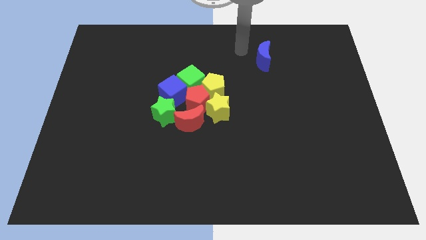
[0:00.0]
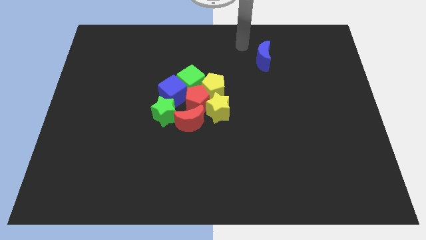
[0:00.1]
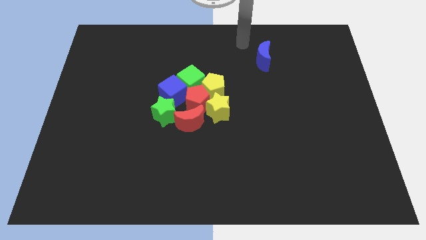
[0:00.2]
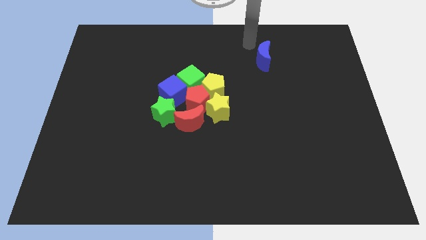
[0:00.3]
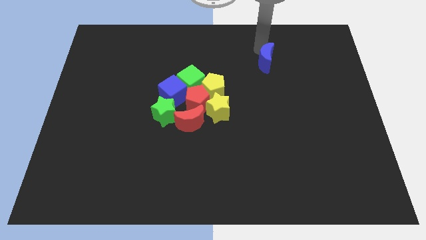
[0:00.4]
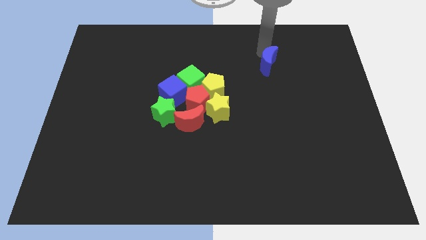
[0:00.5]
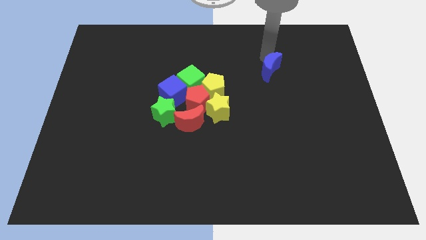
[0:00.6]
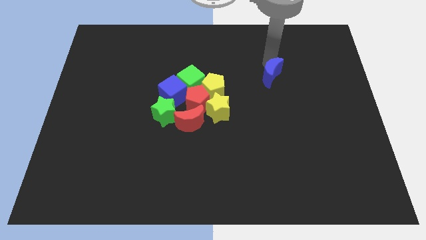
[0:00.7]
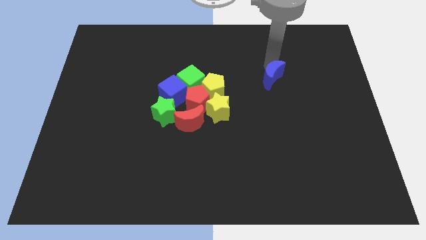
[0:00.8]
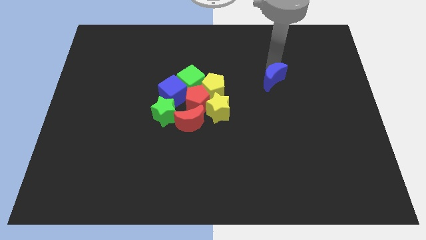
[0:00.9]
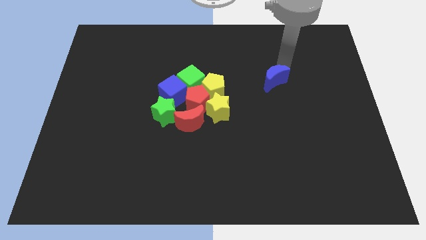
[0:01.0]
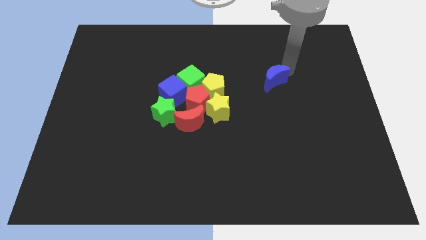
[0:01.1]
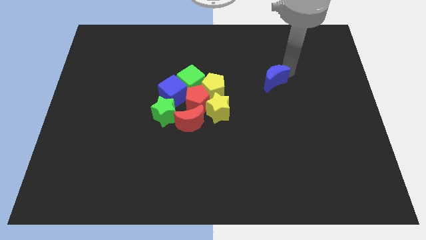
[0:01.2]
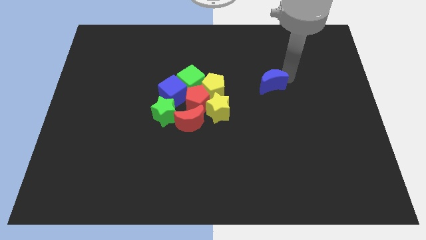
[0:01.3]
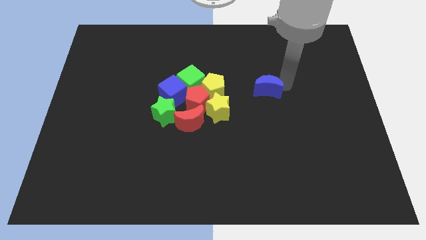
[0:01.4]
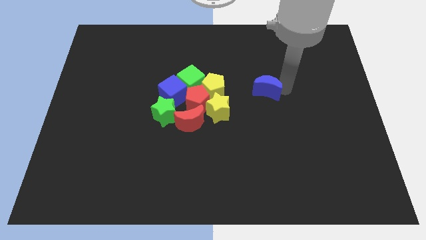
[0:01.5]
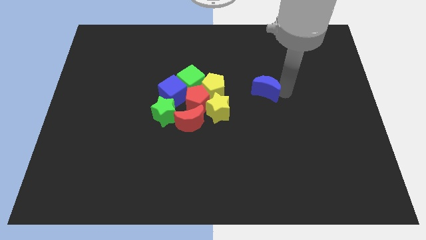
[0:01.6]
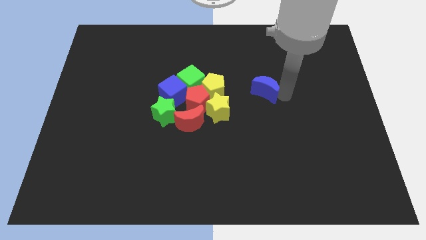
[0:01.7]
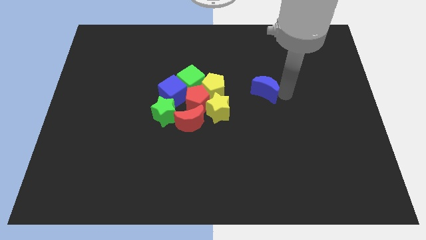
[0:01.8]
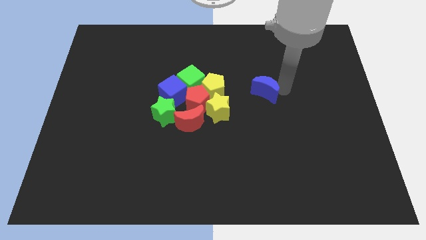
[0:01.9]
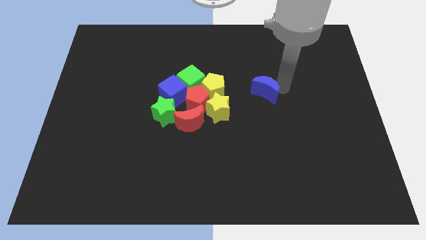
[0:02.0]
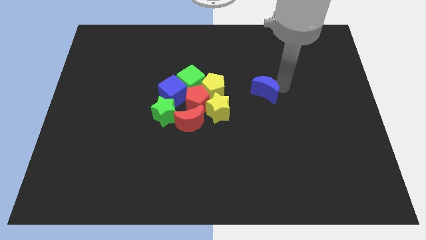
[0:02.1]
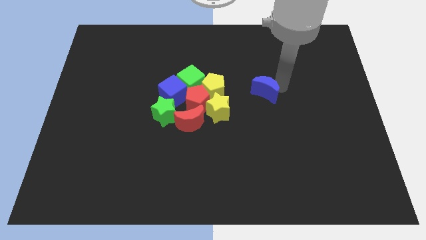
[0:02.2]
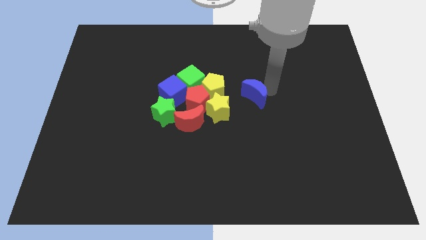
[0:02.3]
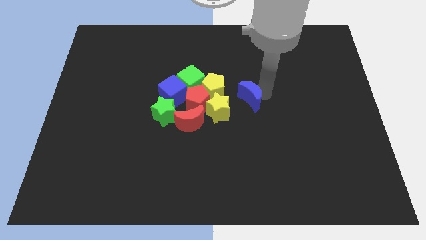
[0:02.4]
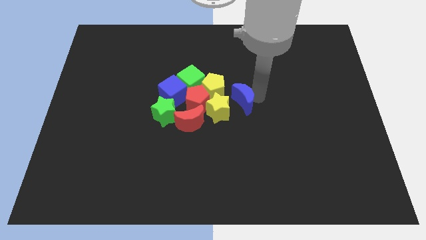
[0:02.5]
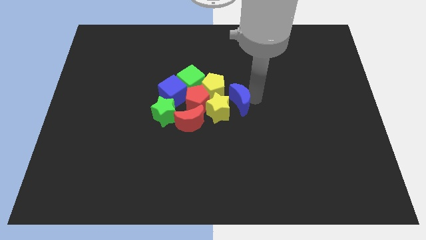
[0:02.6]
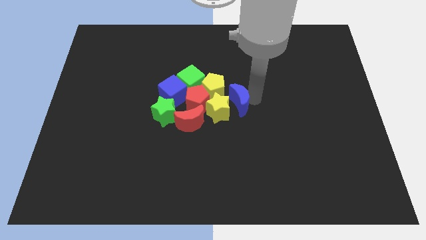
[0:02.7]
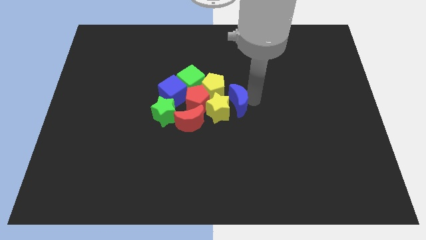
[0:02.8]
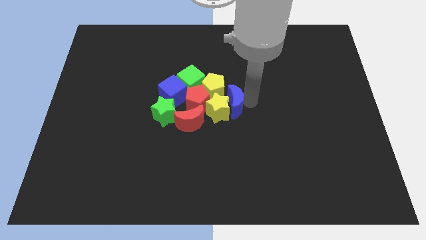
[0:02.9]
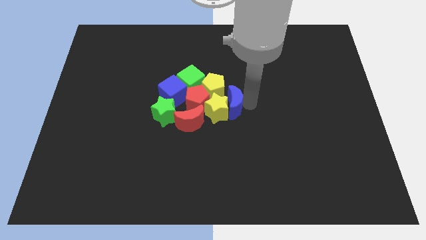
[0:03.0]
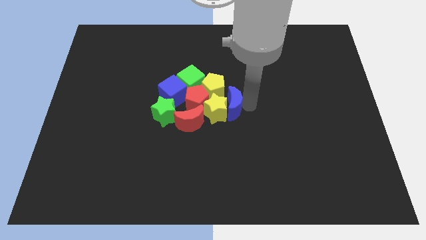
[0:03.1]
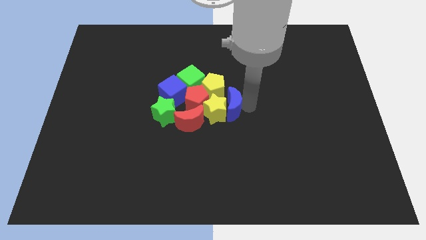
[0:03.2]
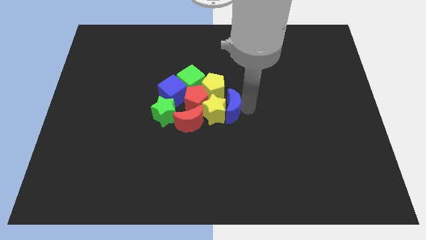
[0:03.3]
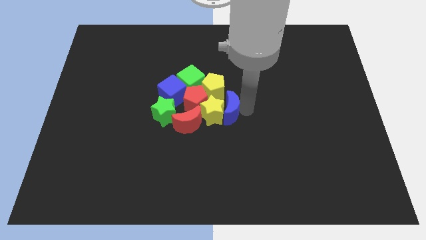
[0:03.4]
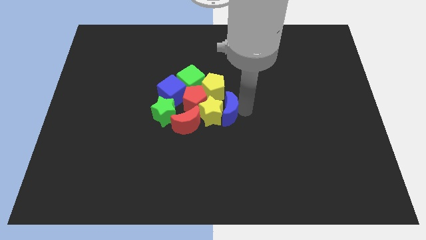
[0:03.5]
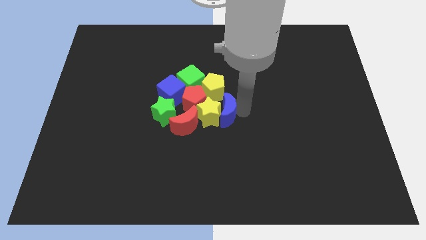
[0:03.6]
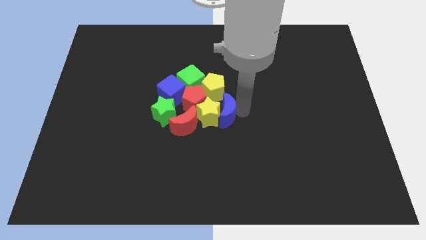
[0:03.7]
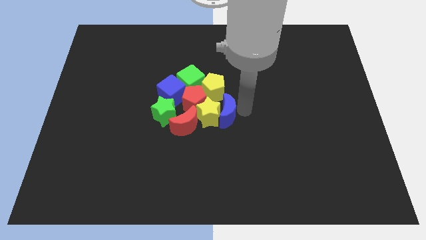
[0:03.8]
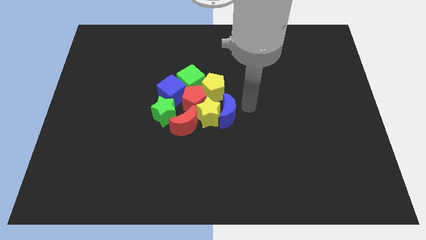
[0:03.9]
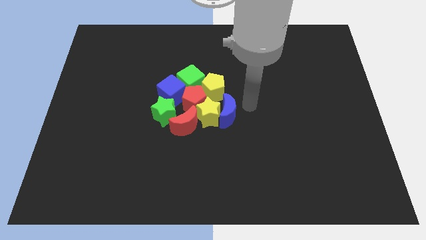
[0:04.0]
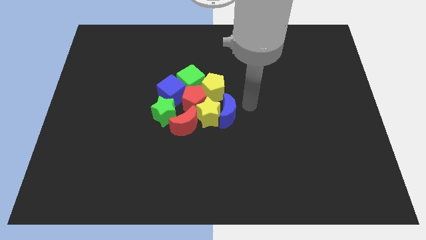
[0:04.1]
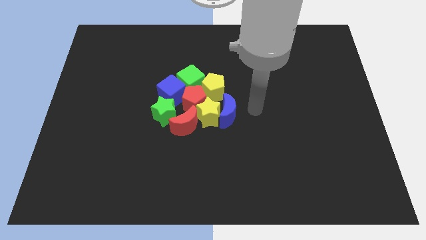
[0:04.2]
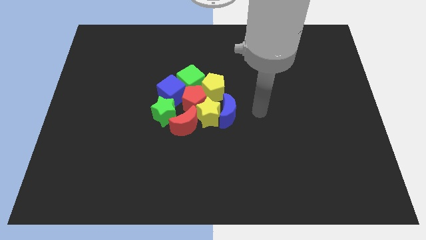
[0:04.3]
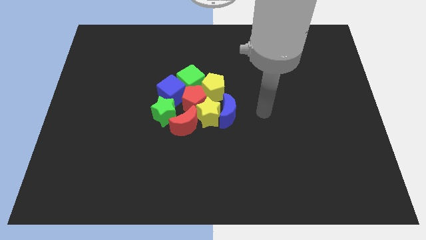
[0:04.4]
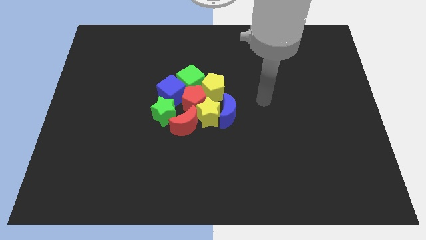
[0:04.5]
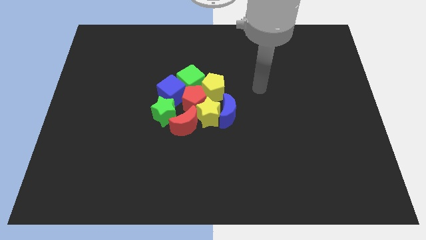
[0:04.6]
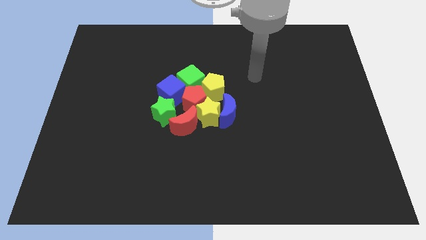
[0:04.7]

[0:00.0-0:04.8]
push the blue crescent to the right side of the yellow star

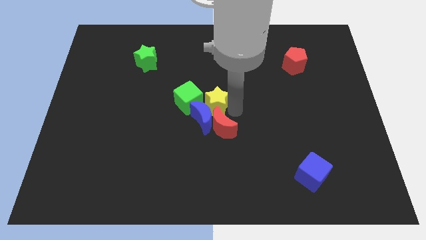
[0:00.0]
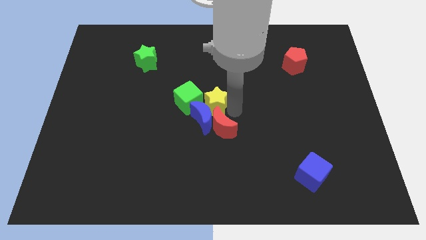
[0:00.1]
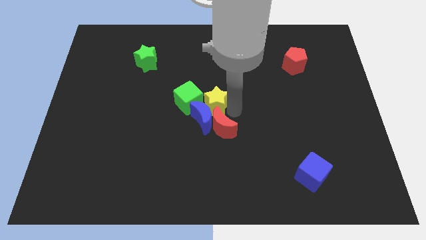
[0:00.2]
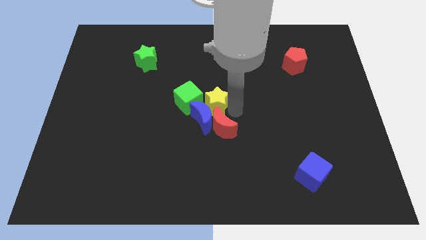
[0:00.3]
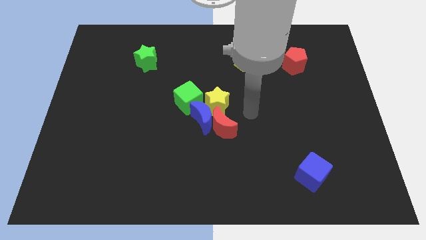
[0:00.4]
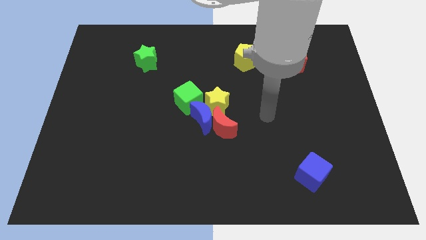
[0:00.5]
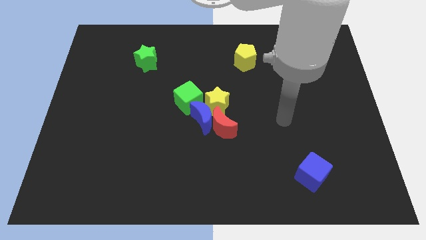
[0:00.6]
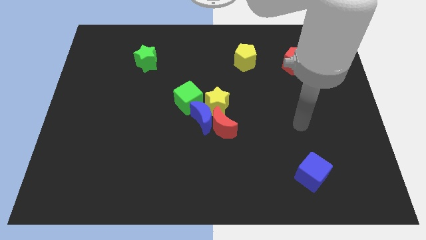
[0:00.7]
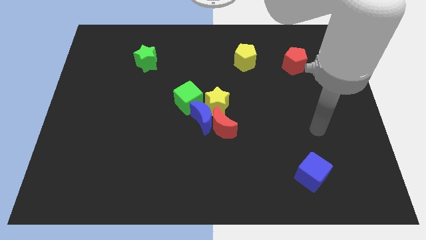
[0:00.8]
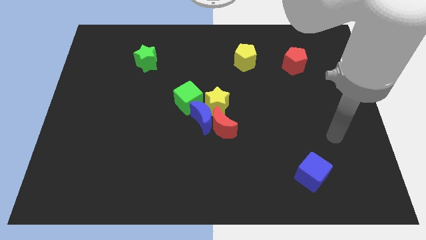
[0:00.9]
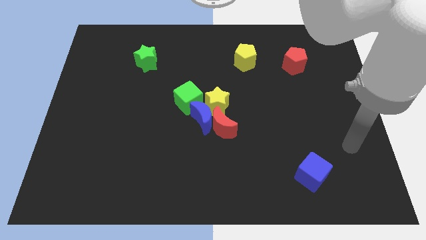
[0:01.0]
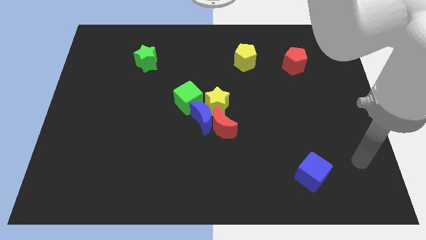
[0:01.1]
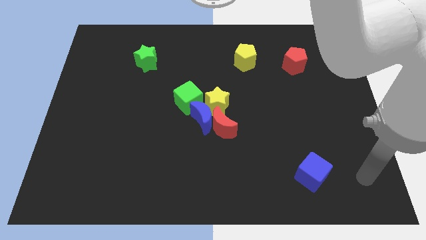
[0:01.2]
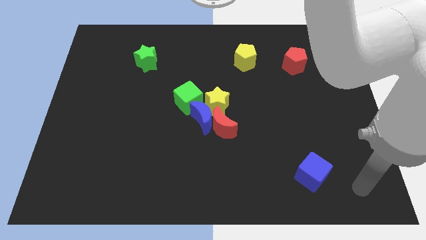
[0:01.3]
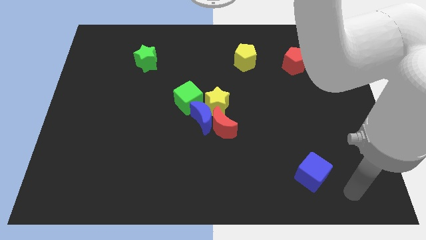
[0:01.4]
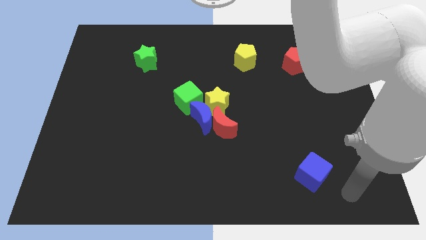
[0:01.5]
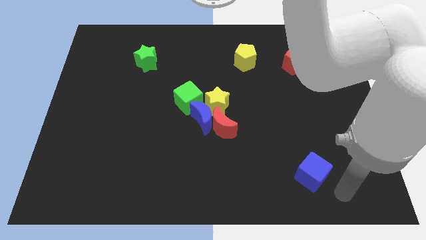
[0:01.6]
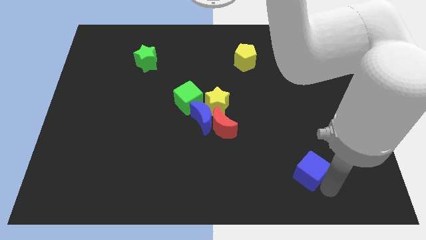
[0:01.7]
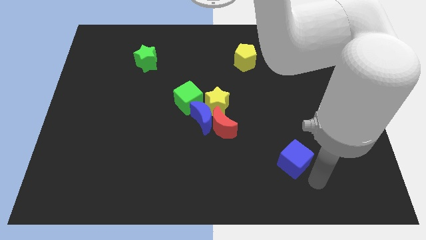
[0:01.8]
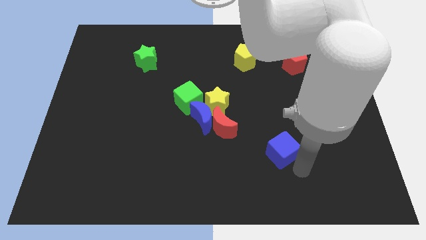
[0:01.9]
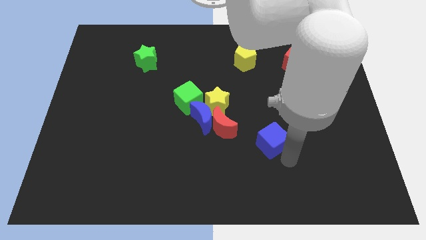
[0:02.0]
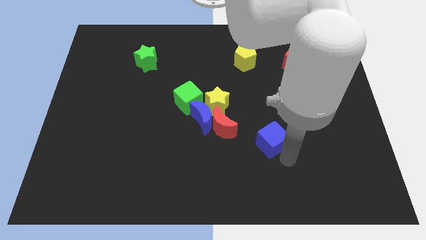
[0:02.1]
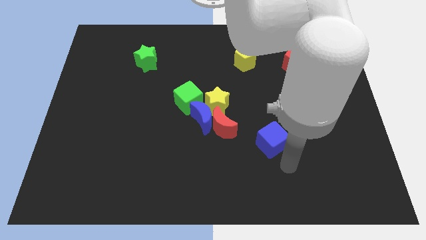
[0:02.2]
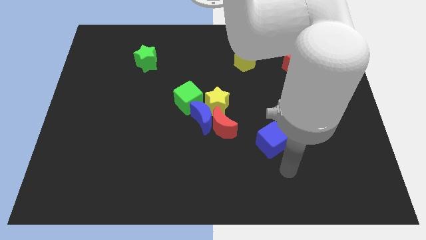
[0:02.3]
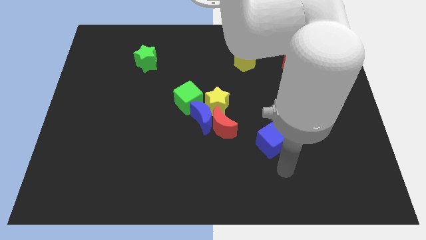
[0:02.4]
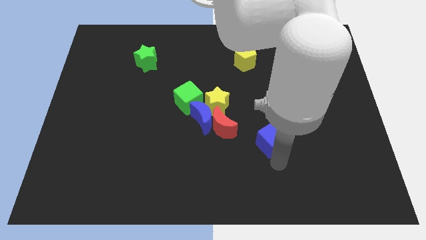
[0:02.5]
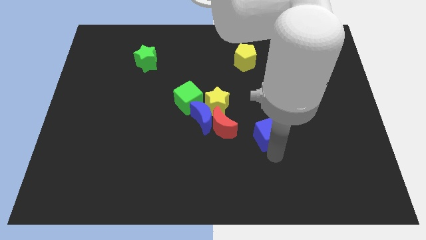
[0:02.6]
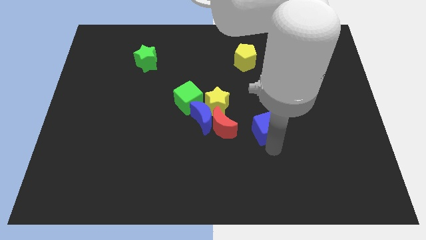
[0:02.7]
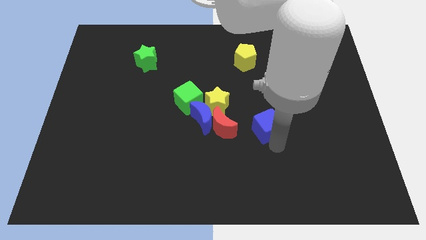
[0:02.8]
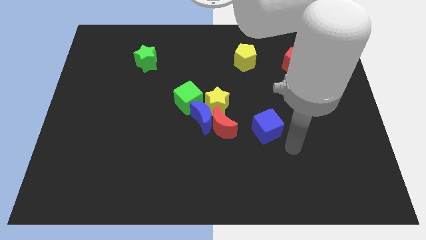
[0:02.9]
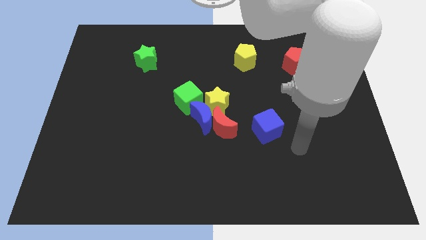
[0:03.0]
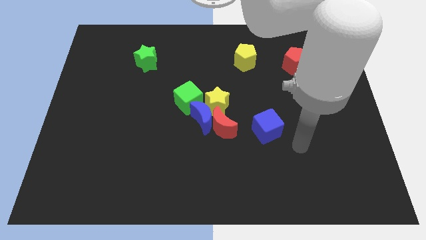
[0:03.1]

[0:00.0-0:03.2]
place the blue cube to the right of red moon

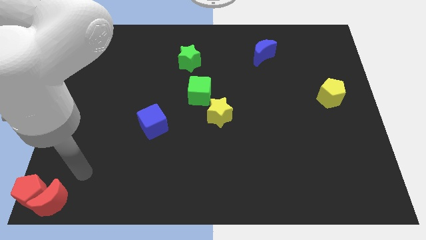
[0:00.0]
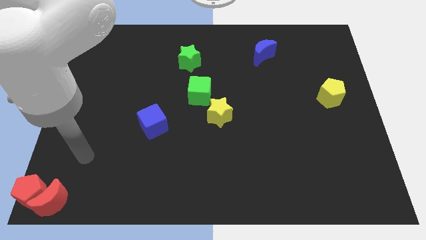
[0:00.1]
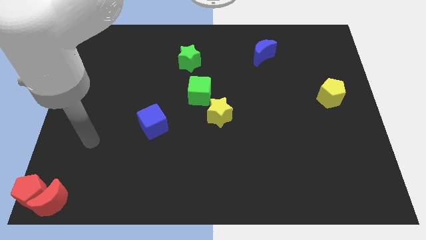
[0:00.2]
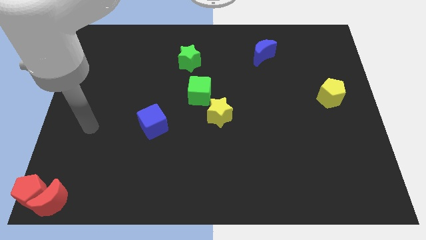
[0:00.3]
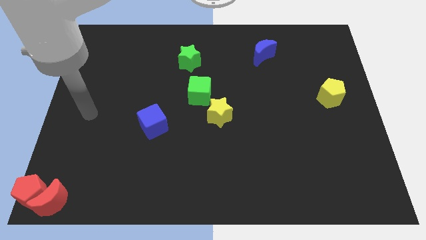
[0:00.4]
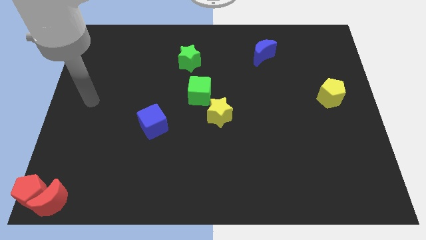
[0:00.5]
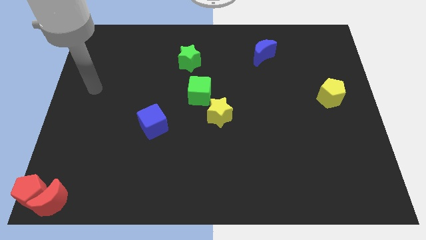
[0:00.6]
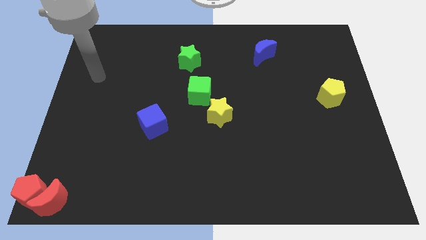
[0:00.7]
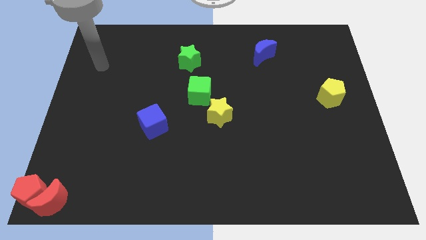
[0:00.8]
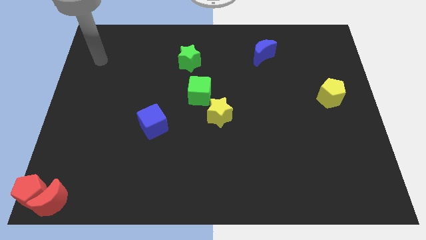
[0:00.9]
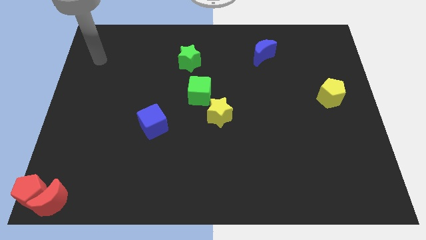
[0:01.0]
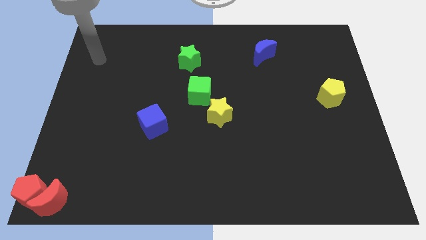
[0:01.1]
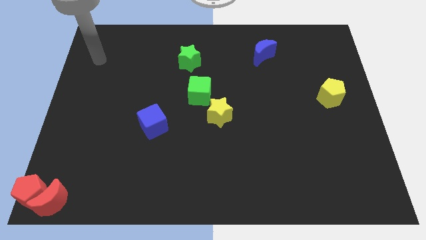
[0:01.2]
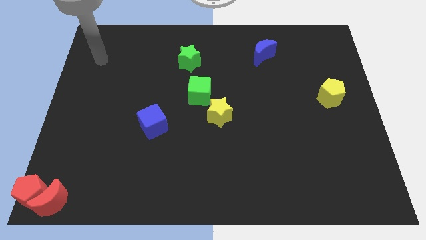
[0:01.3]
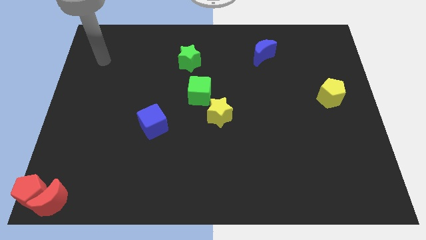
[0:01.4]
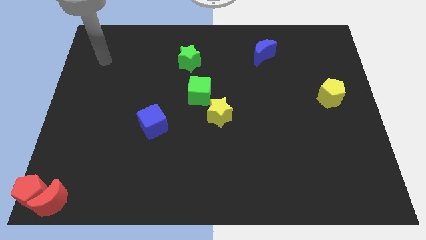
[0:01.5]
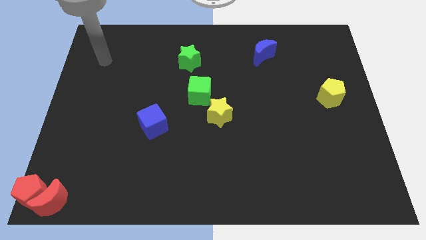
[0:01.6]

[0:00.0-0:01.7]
place your hand at top left corner side of the board
